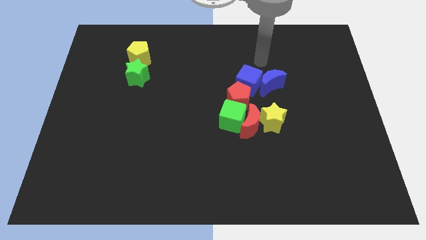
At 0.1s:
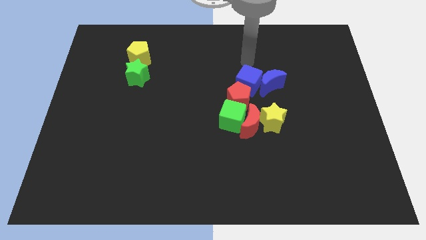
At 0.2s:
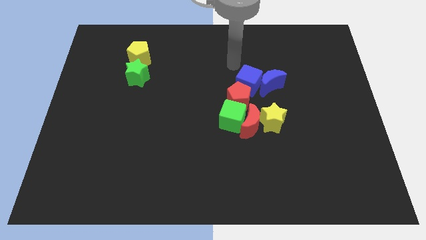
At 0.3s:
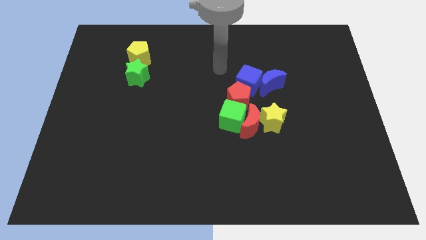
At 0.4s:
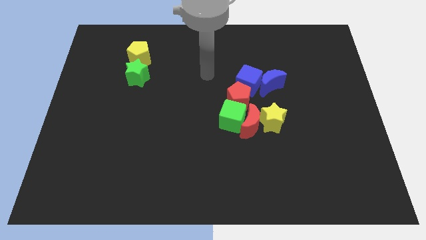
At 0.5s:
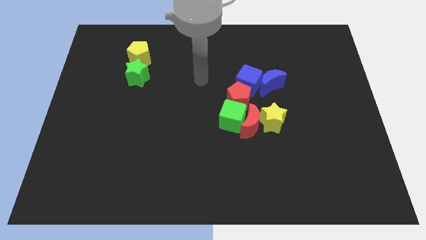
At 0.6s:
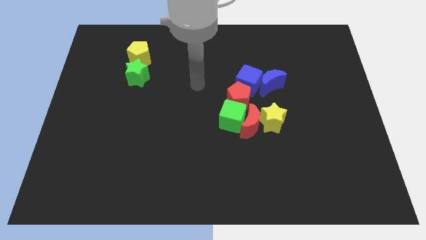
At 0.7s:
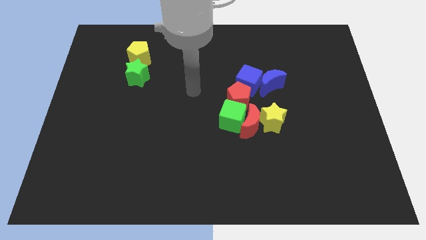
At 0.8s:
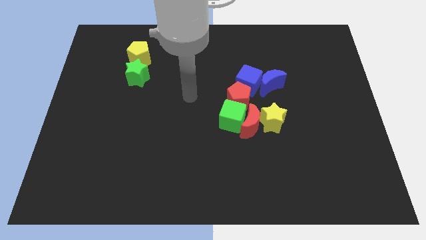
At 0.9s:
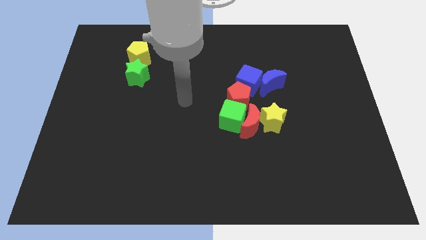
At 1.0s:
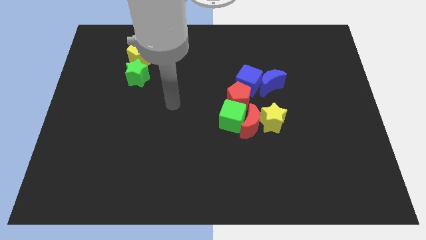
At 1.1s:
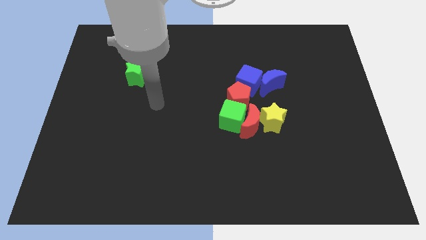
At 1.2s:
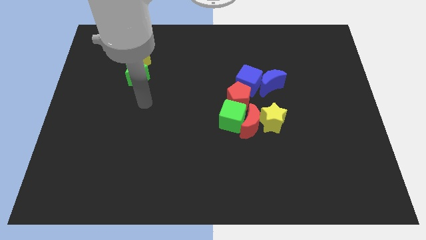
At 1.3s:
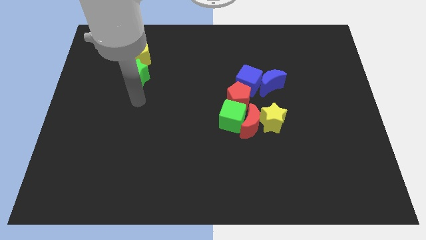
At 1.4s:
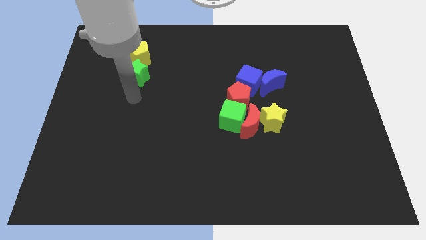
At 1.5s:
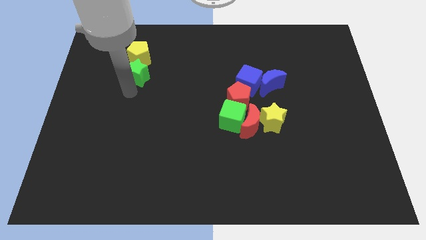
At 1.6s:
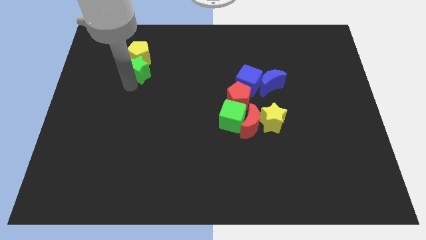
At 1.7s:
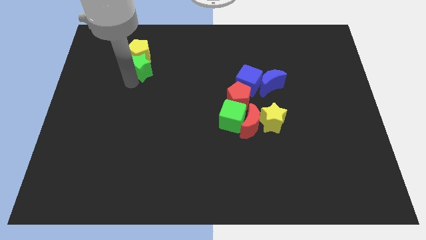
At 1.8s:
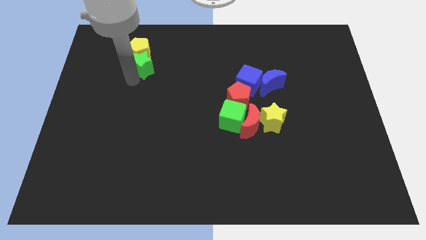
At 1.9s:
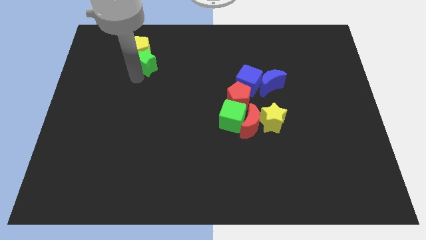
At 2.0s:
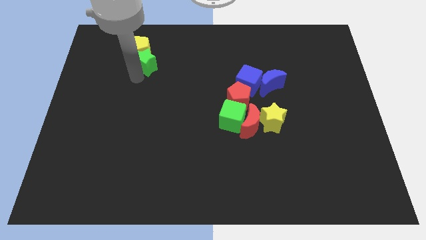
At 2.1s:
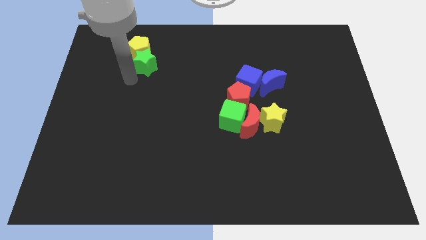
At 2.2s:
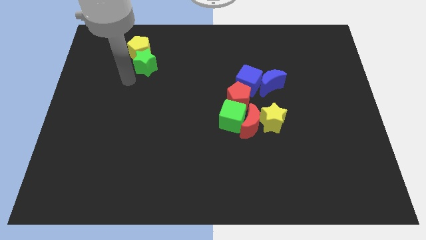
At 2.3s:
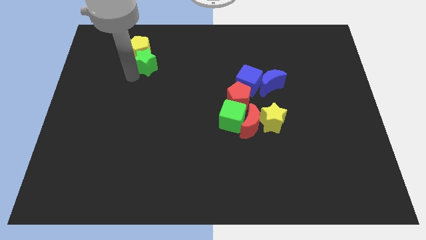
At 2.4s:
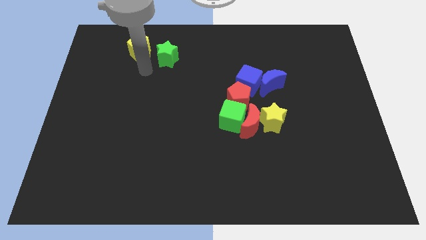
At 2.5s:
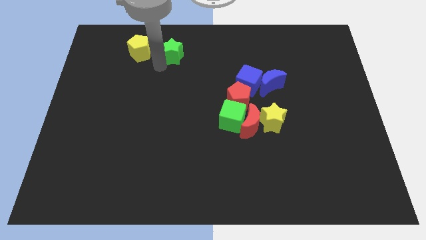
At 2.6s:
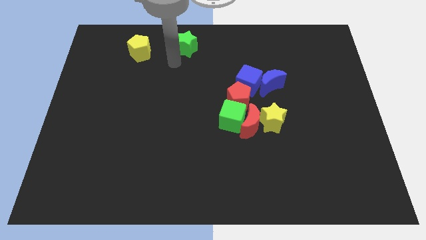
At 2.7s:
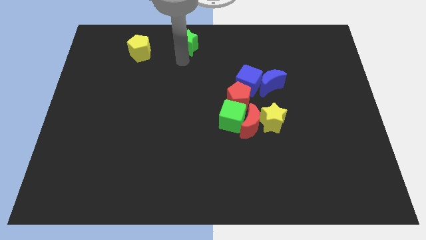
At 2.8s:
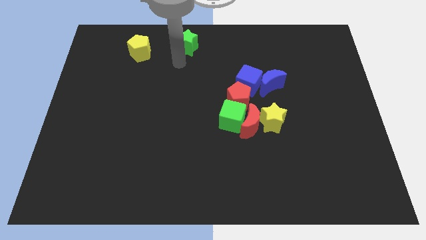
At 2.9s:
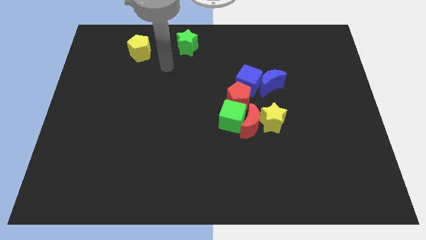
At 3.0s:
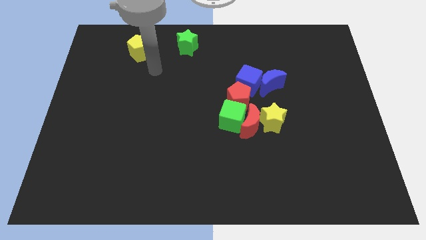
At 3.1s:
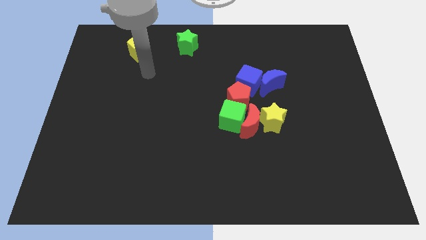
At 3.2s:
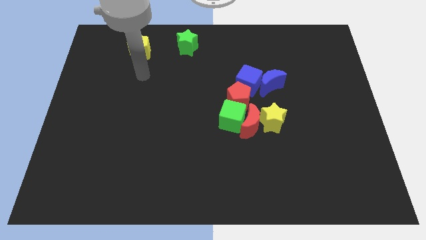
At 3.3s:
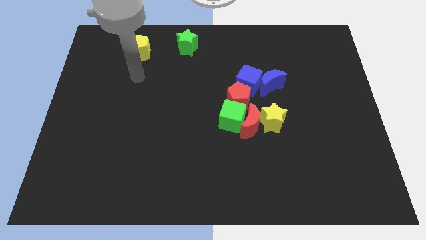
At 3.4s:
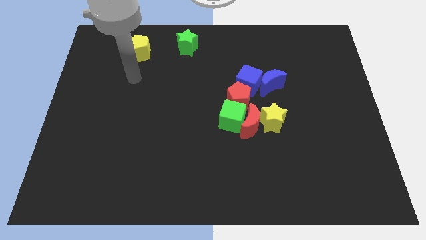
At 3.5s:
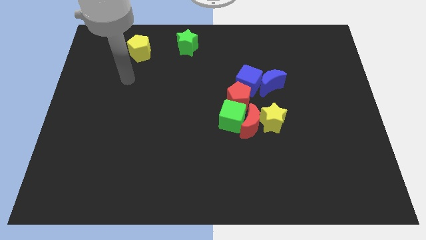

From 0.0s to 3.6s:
separate the green star from the yellow pentagon

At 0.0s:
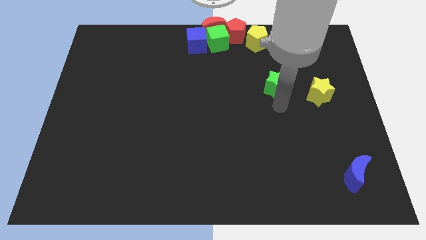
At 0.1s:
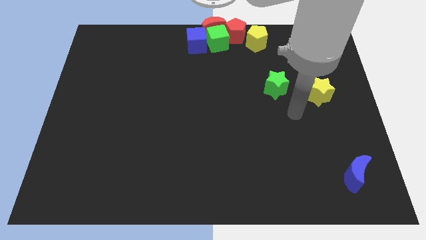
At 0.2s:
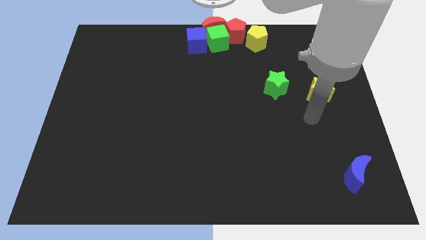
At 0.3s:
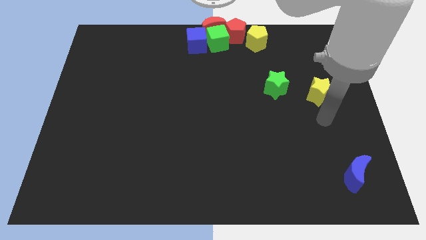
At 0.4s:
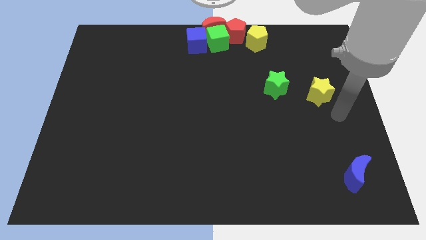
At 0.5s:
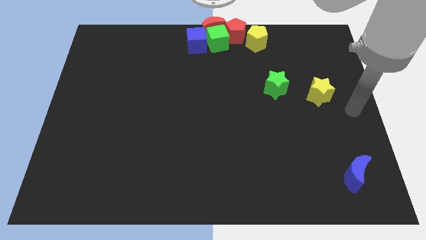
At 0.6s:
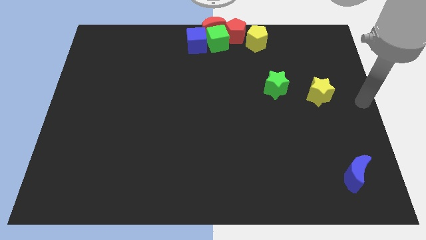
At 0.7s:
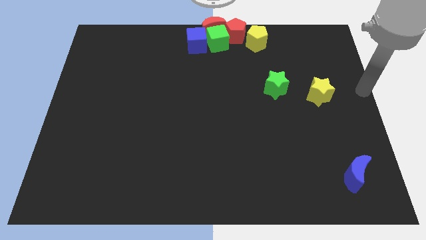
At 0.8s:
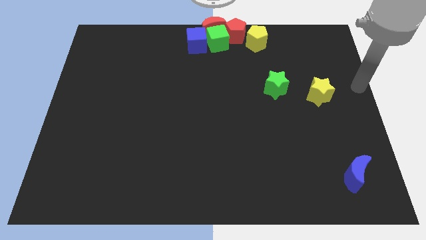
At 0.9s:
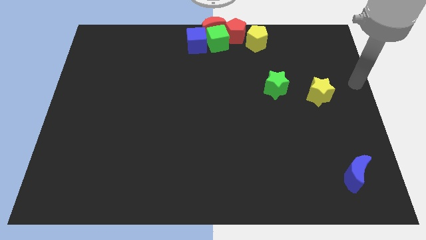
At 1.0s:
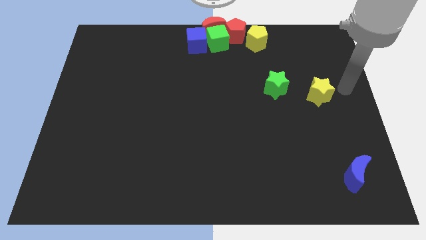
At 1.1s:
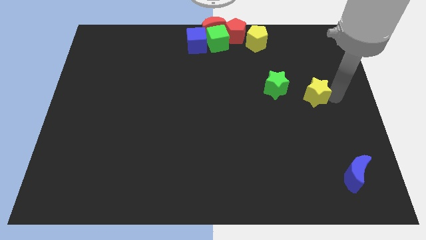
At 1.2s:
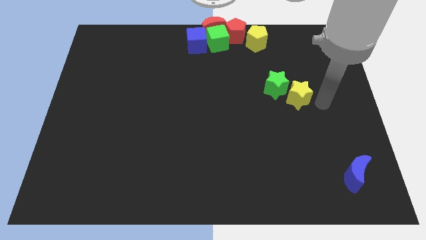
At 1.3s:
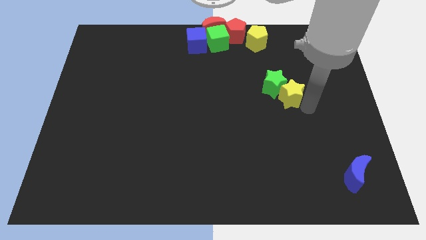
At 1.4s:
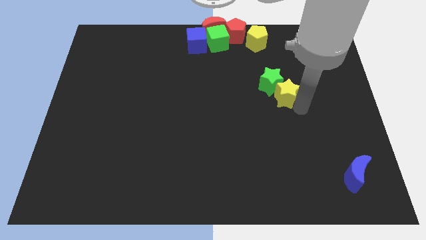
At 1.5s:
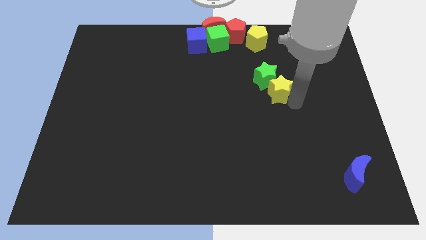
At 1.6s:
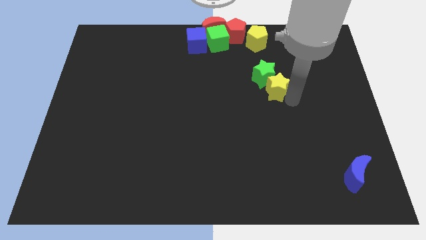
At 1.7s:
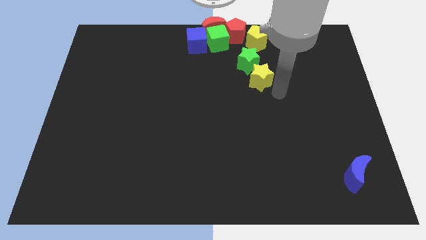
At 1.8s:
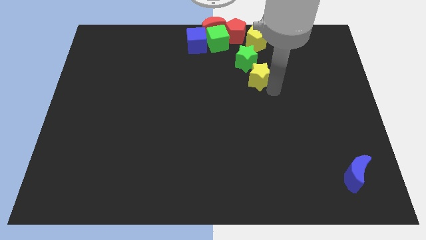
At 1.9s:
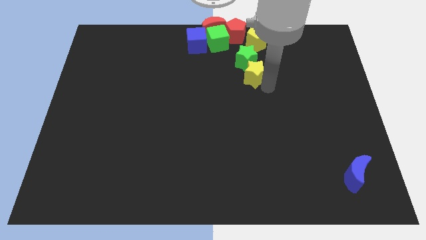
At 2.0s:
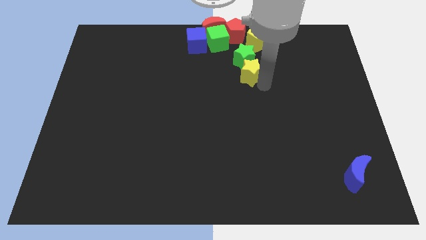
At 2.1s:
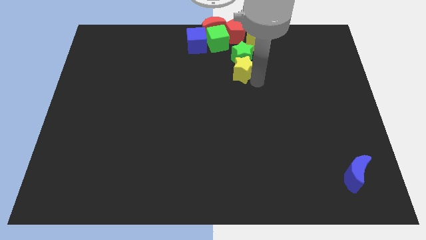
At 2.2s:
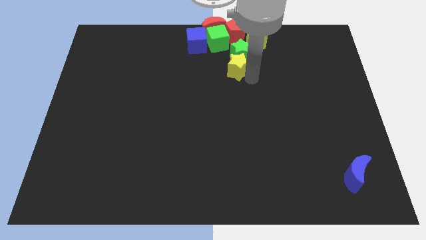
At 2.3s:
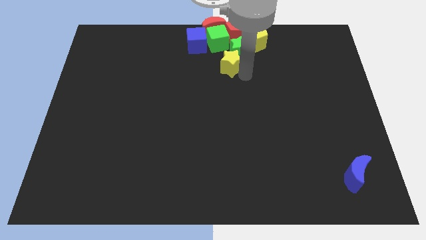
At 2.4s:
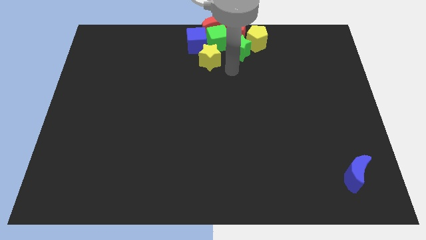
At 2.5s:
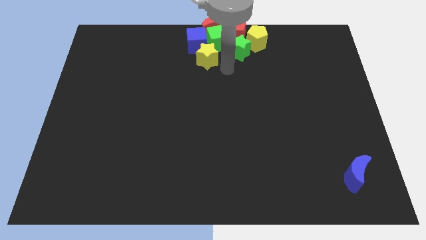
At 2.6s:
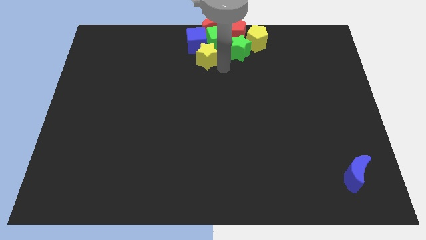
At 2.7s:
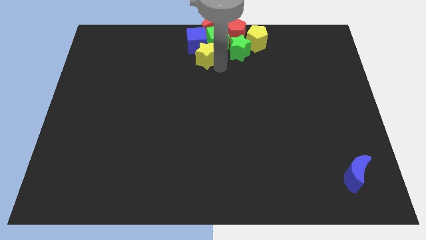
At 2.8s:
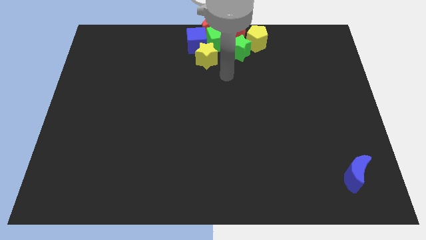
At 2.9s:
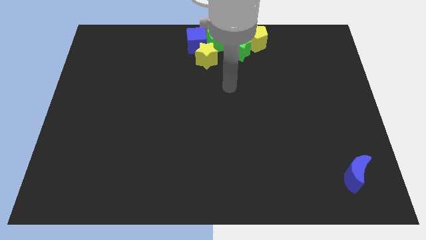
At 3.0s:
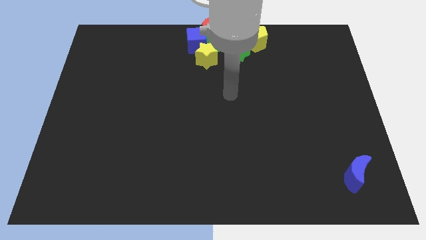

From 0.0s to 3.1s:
push the green star with the yellow star towards the top center

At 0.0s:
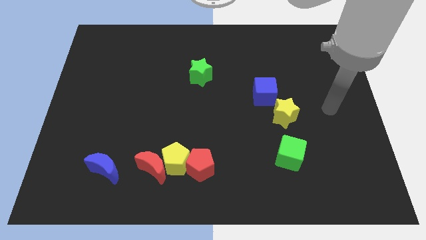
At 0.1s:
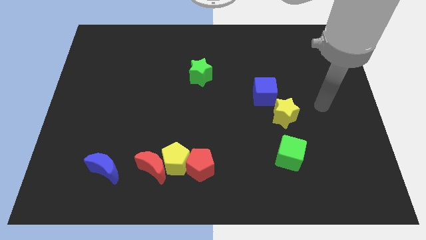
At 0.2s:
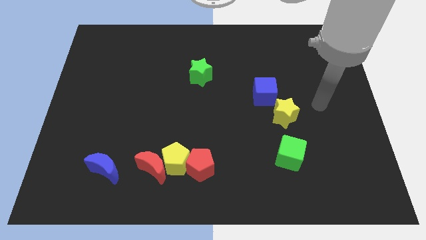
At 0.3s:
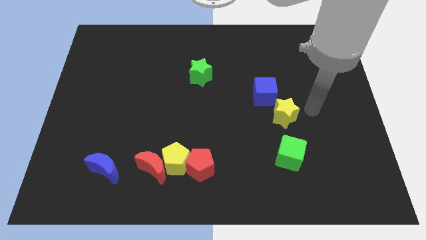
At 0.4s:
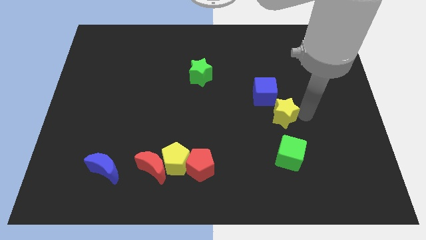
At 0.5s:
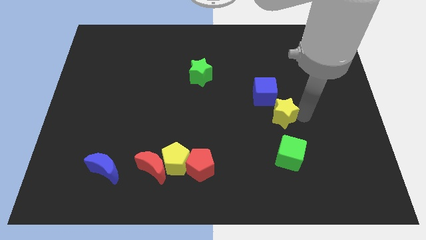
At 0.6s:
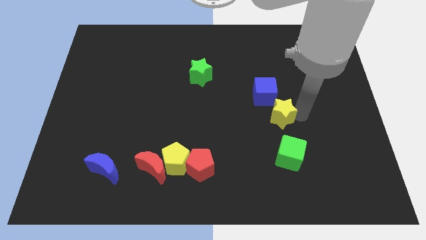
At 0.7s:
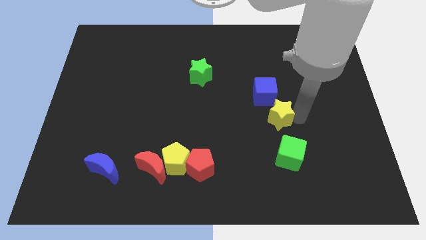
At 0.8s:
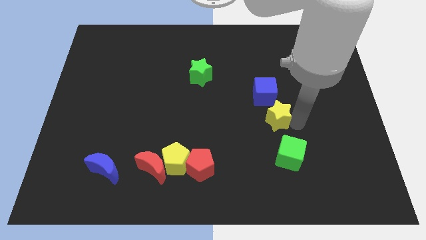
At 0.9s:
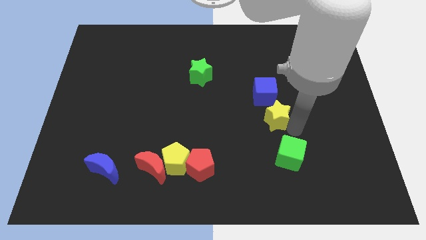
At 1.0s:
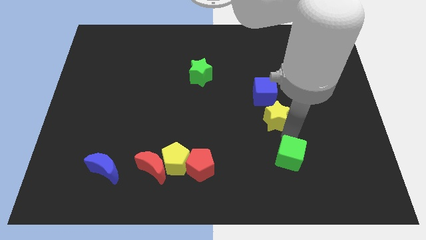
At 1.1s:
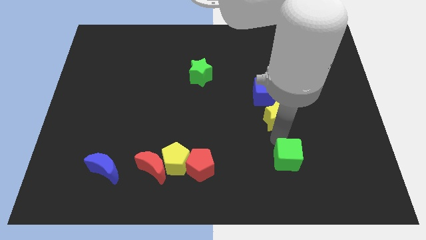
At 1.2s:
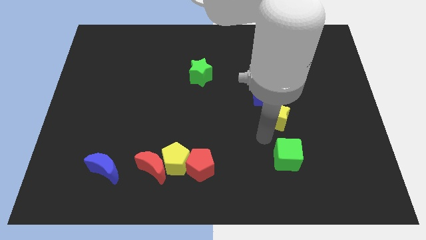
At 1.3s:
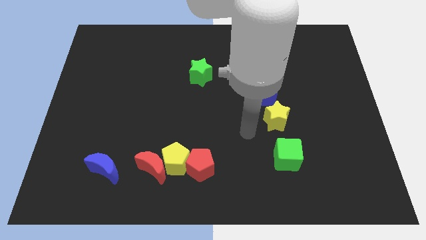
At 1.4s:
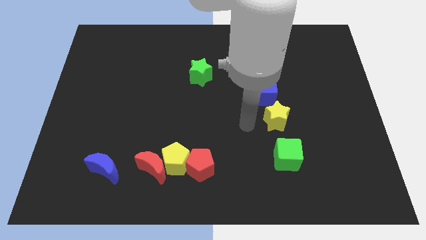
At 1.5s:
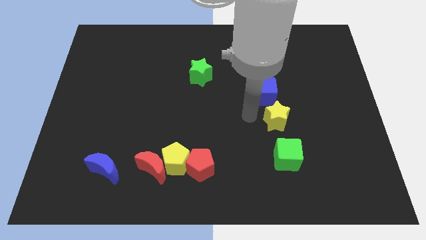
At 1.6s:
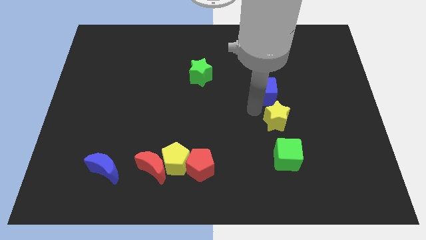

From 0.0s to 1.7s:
touch the arm to the yellow star and green cube

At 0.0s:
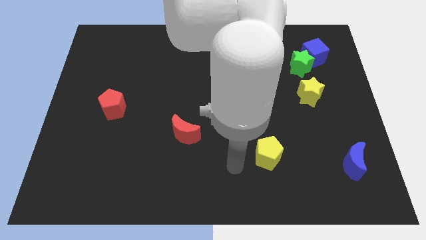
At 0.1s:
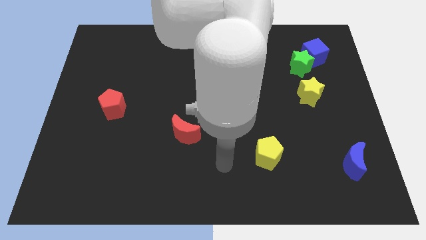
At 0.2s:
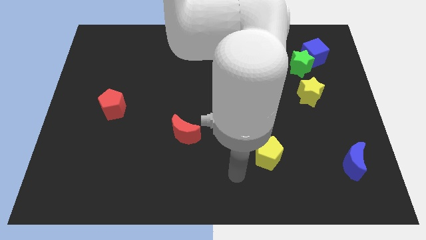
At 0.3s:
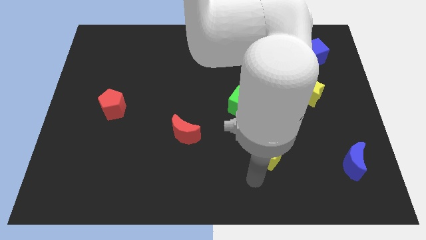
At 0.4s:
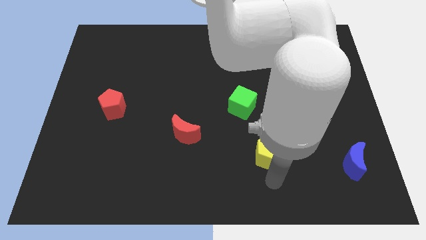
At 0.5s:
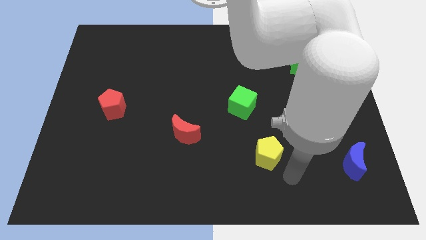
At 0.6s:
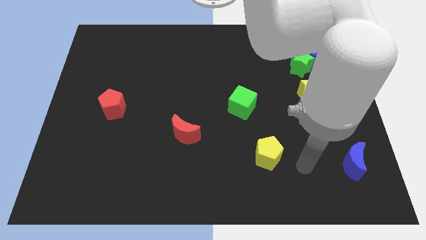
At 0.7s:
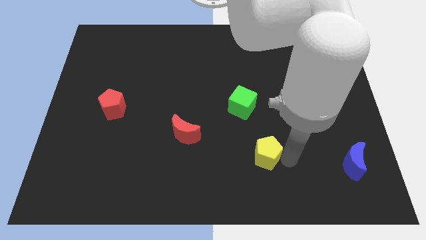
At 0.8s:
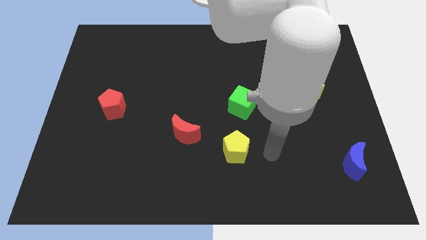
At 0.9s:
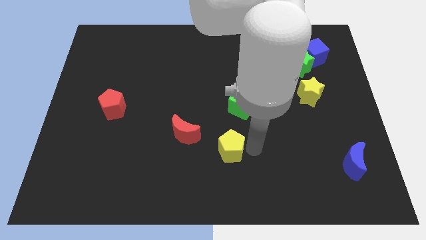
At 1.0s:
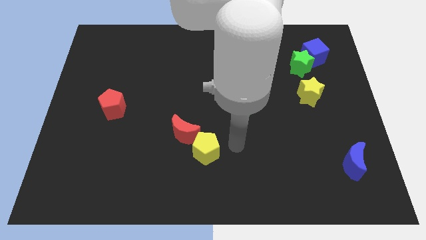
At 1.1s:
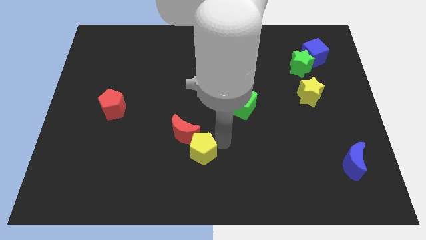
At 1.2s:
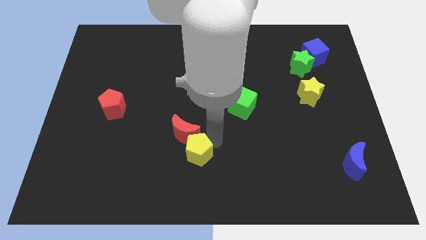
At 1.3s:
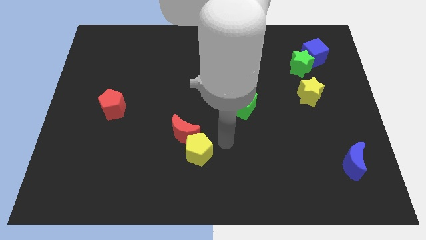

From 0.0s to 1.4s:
move the yellow pentagon to the bottom right of red crescent
